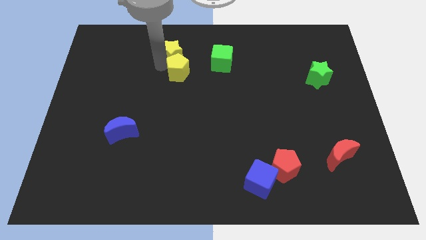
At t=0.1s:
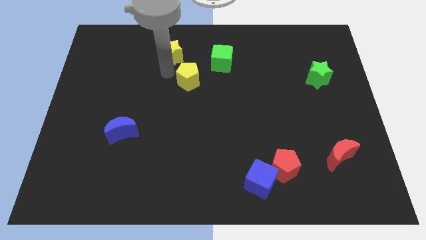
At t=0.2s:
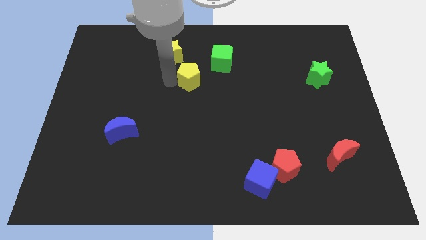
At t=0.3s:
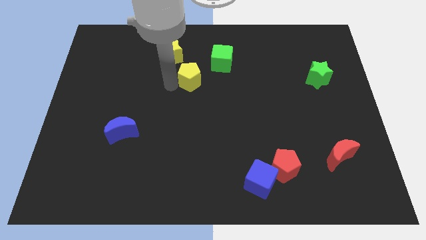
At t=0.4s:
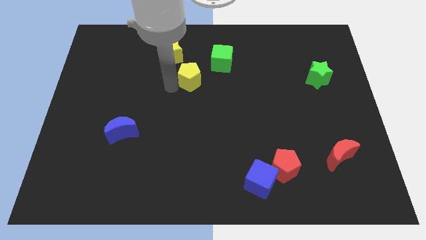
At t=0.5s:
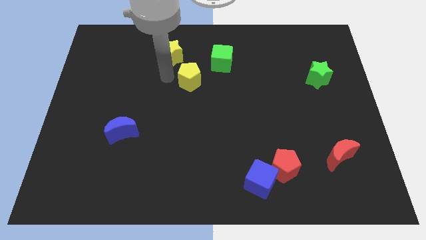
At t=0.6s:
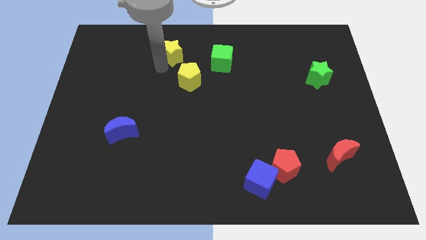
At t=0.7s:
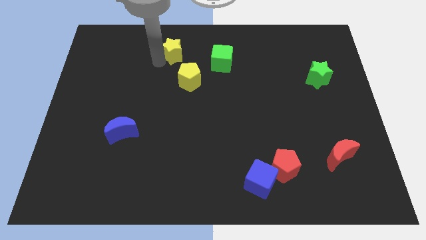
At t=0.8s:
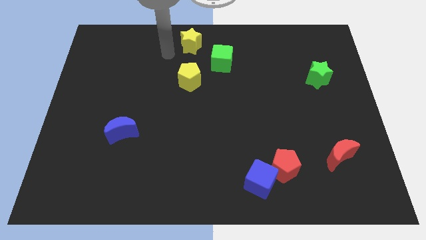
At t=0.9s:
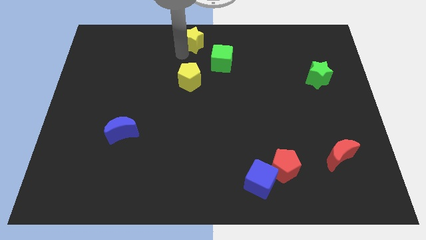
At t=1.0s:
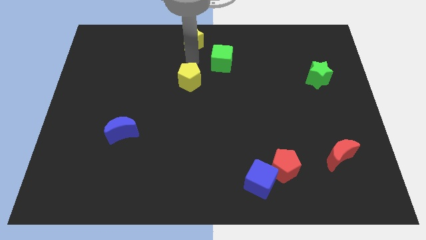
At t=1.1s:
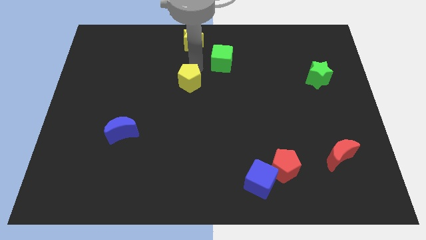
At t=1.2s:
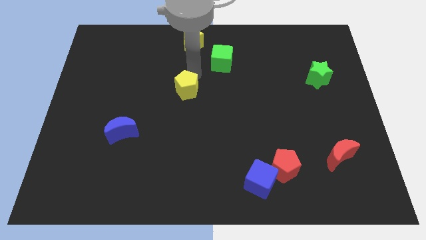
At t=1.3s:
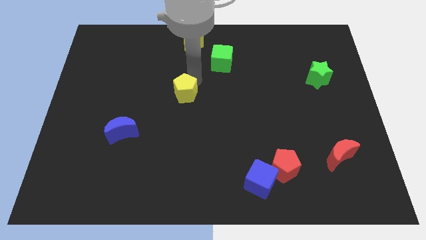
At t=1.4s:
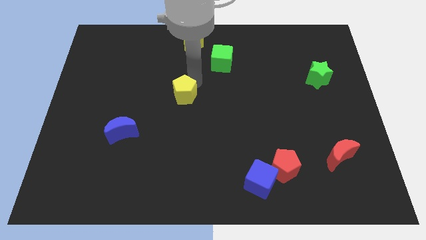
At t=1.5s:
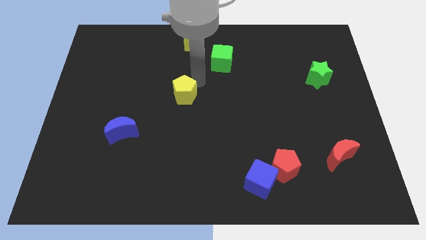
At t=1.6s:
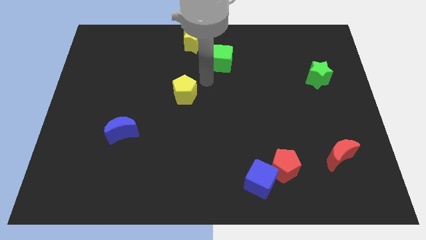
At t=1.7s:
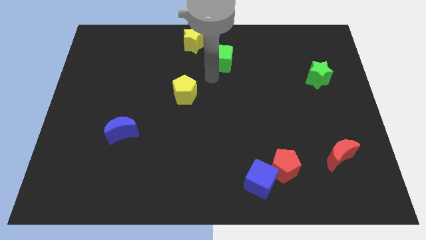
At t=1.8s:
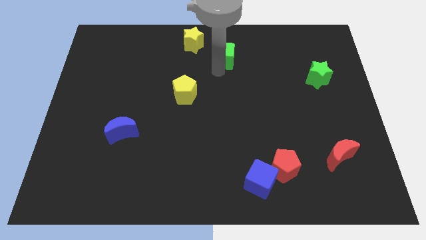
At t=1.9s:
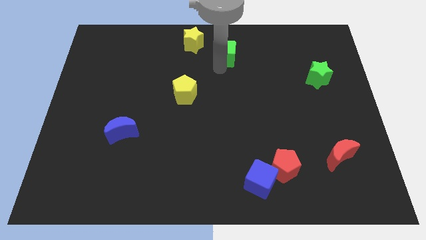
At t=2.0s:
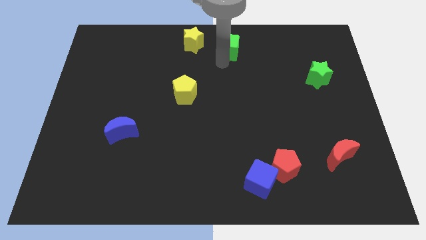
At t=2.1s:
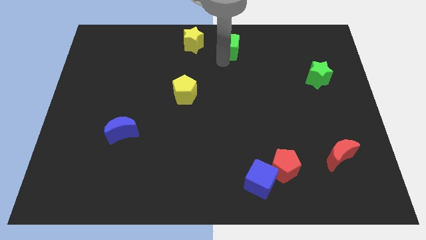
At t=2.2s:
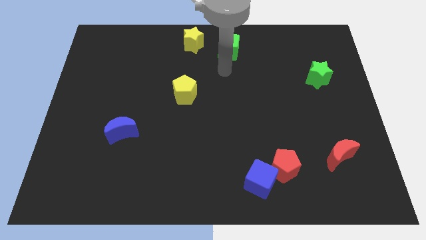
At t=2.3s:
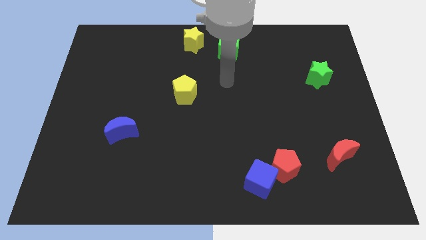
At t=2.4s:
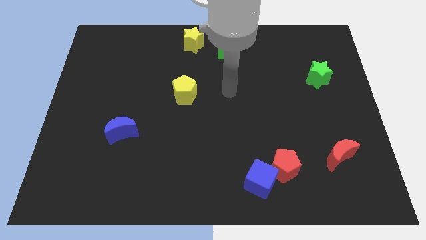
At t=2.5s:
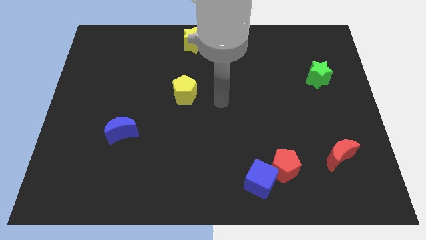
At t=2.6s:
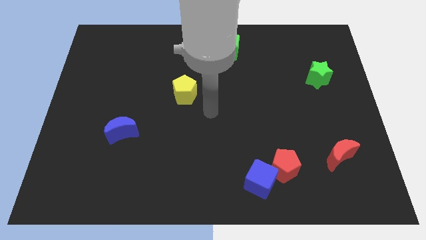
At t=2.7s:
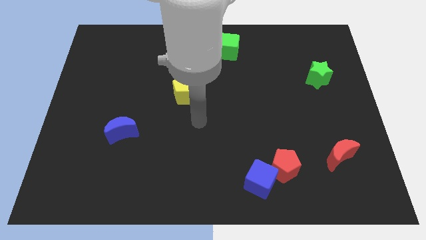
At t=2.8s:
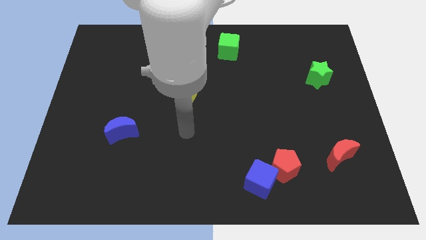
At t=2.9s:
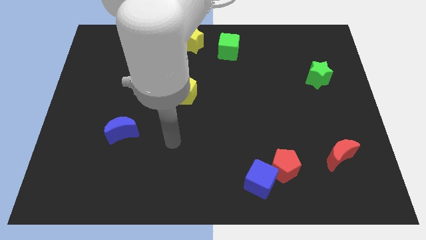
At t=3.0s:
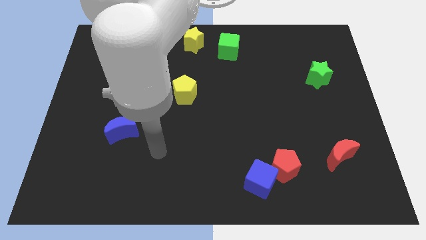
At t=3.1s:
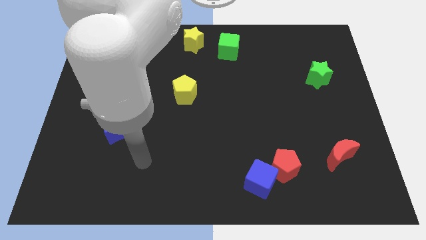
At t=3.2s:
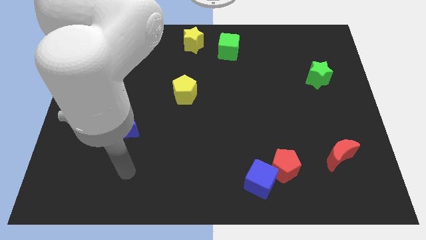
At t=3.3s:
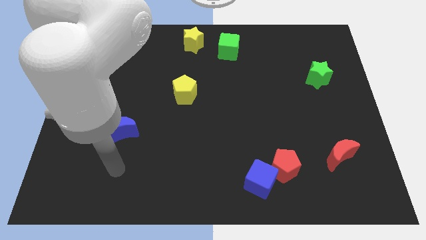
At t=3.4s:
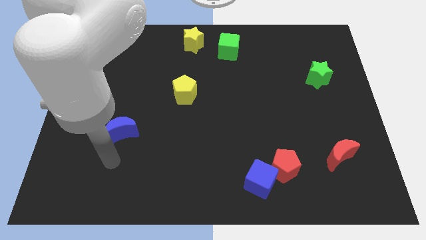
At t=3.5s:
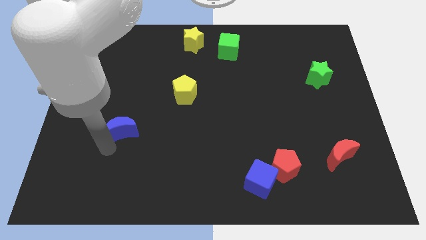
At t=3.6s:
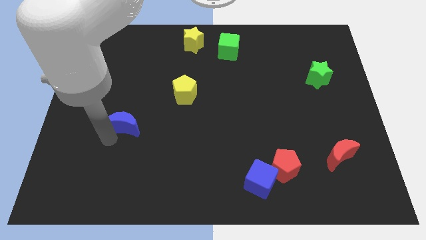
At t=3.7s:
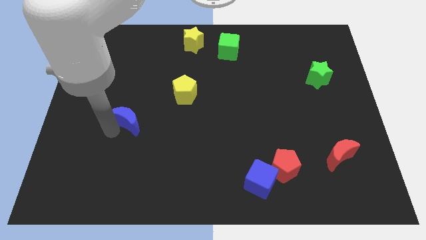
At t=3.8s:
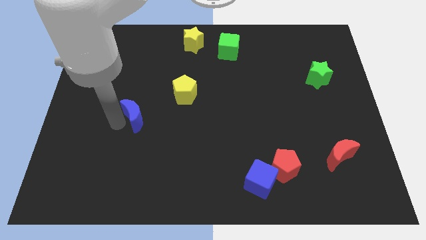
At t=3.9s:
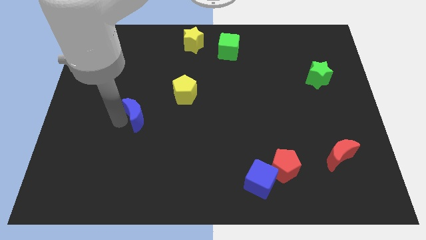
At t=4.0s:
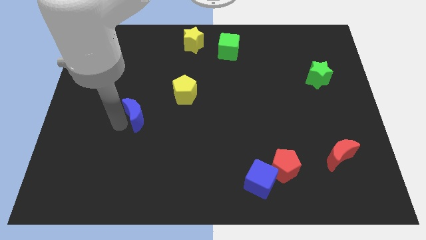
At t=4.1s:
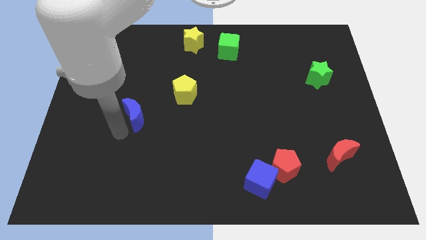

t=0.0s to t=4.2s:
move the yellow pentagon diagonally to the green cube

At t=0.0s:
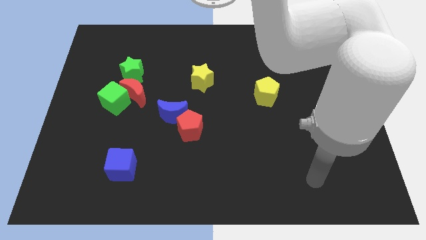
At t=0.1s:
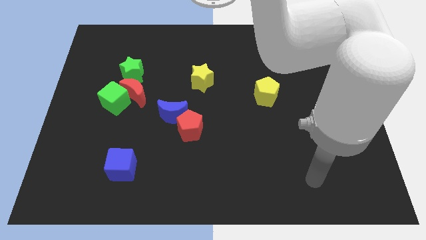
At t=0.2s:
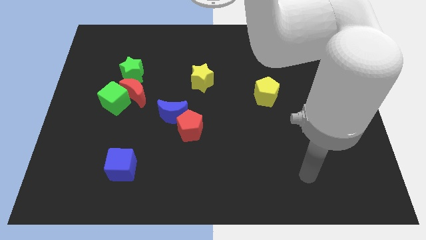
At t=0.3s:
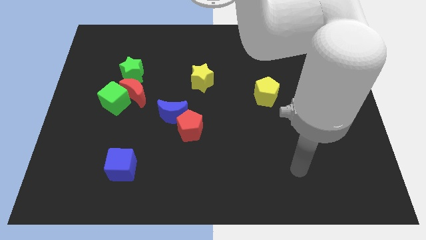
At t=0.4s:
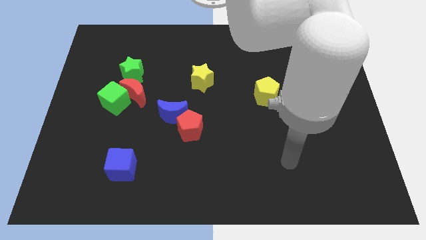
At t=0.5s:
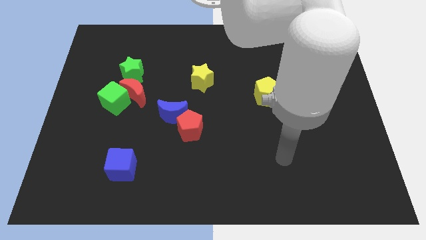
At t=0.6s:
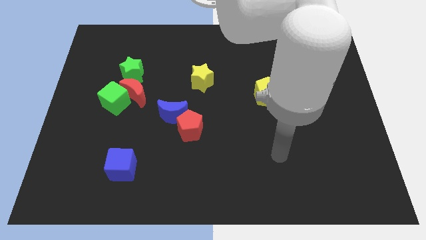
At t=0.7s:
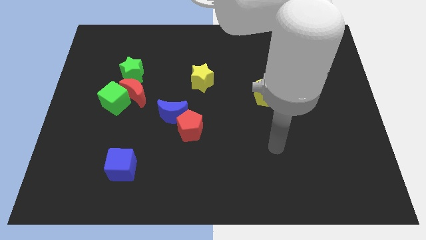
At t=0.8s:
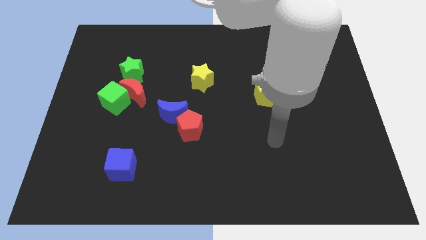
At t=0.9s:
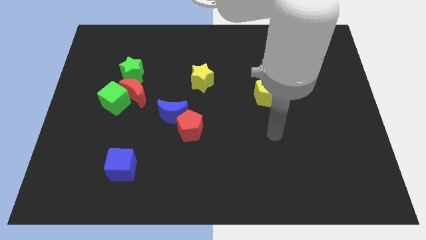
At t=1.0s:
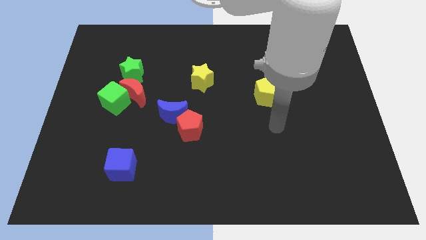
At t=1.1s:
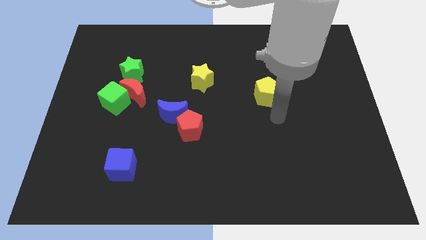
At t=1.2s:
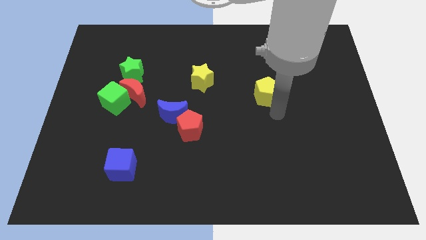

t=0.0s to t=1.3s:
point your arm at the bottom of the yellow pentagon

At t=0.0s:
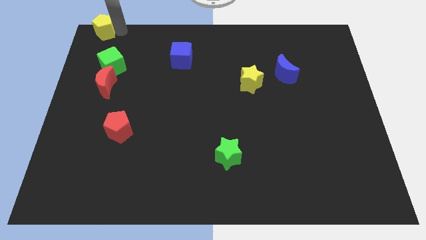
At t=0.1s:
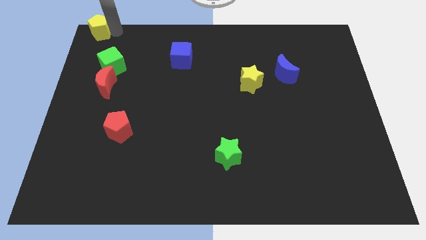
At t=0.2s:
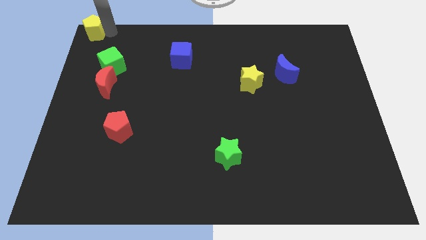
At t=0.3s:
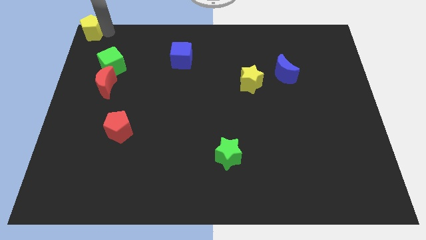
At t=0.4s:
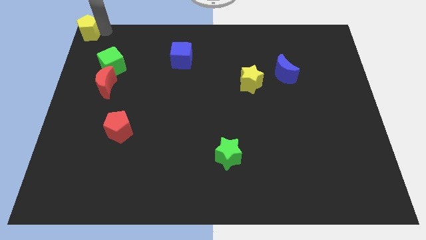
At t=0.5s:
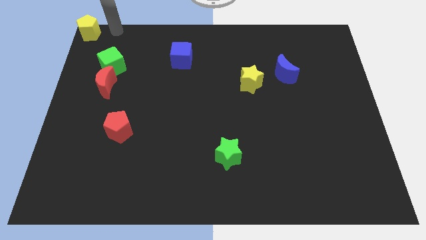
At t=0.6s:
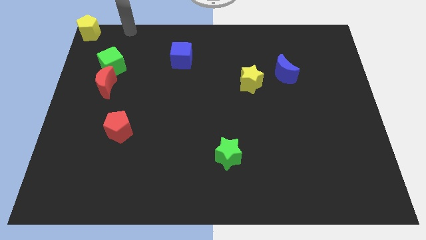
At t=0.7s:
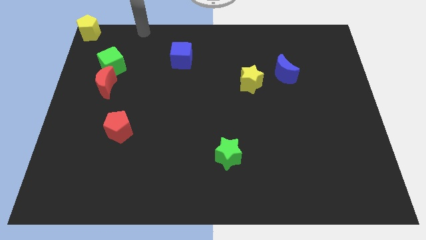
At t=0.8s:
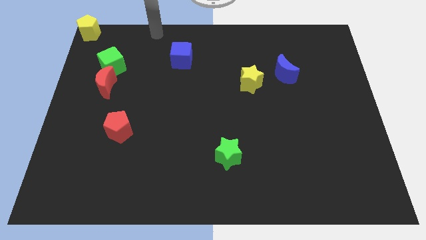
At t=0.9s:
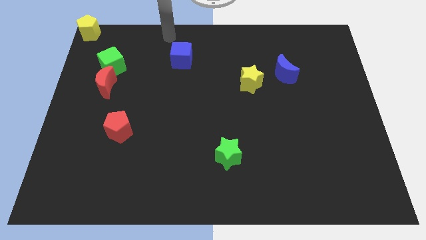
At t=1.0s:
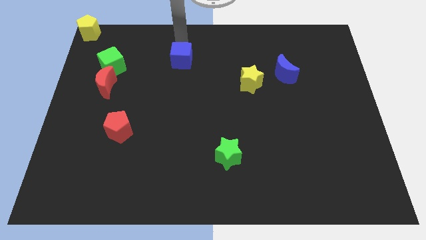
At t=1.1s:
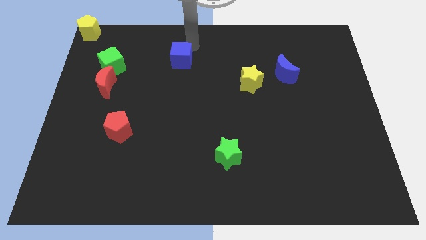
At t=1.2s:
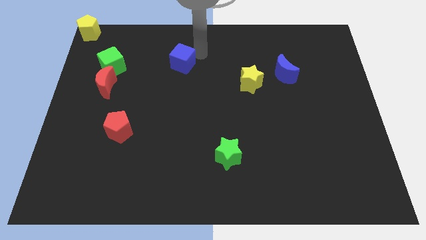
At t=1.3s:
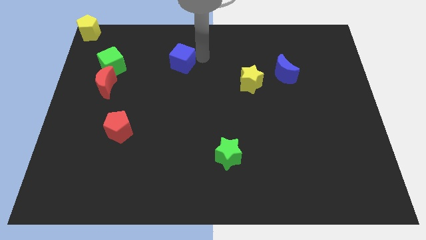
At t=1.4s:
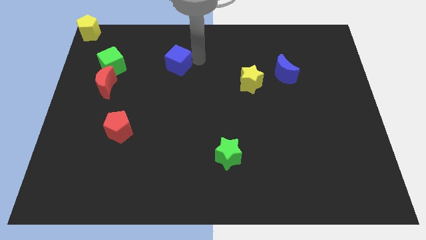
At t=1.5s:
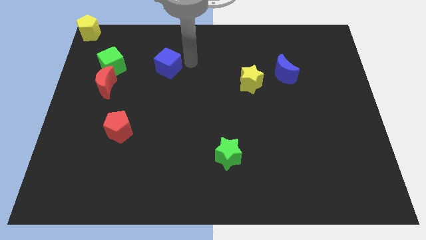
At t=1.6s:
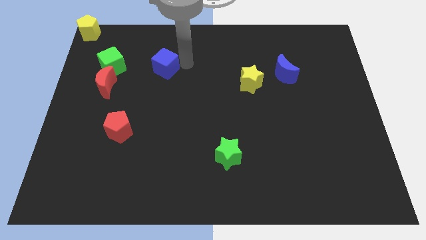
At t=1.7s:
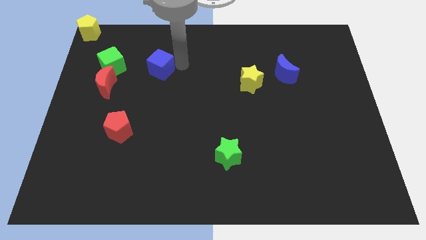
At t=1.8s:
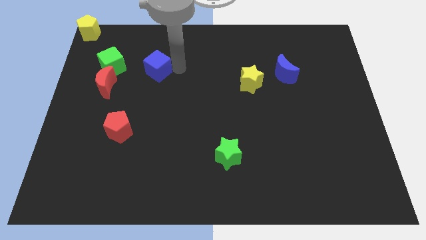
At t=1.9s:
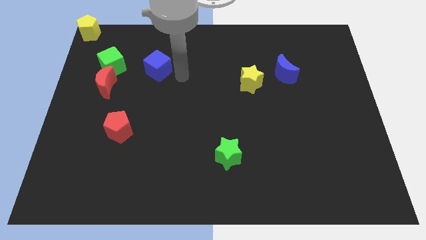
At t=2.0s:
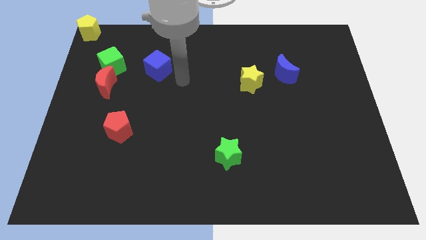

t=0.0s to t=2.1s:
move blue cube near the green cube

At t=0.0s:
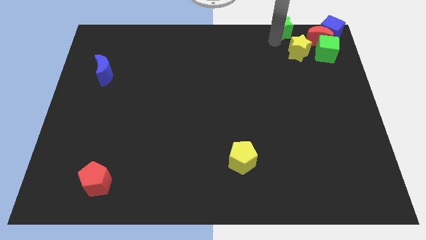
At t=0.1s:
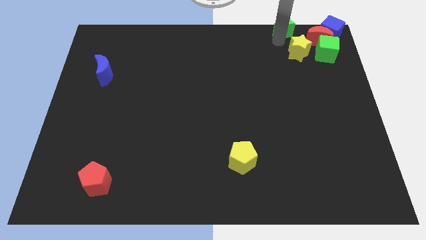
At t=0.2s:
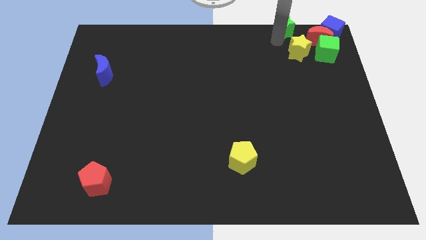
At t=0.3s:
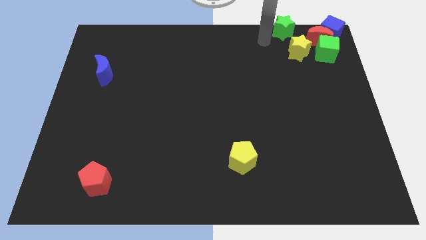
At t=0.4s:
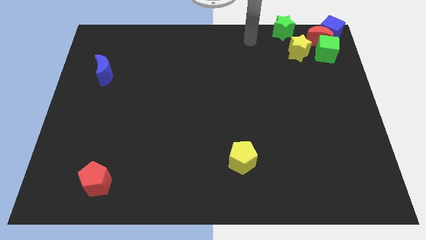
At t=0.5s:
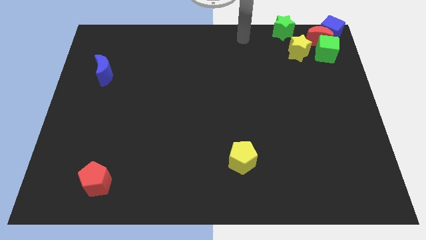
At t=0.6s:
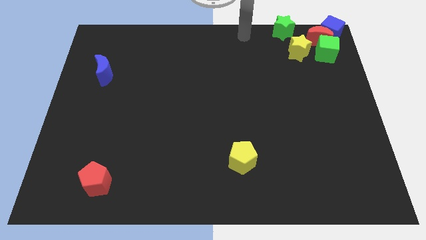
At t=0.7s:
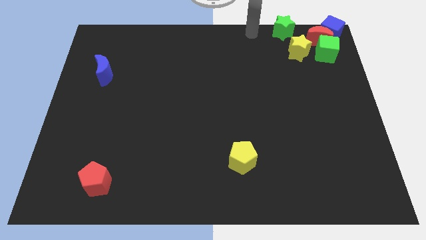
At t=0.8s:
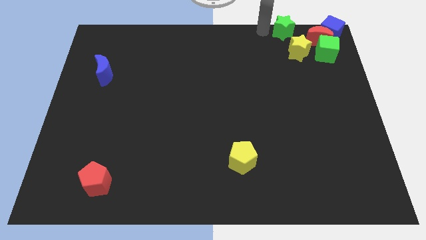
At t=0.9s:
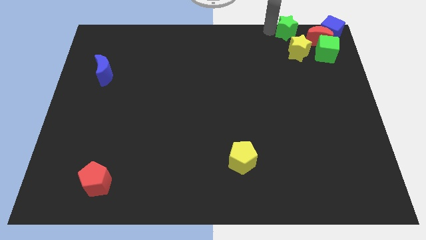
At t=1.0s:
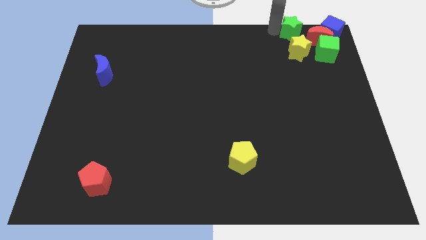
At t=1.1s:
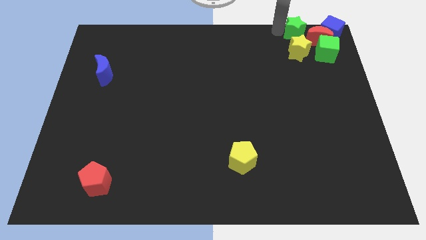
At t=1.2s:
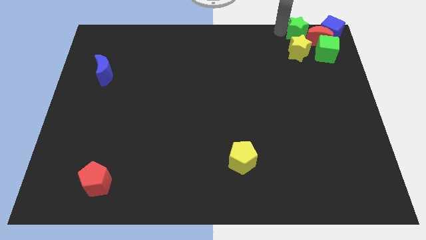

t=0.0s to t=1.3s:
place the green star above the yellow star

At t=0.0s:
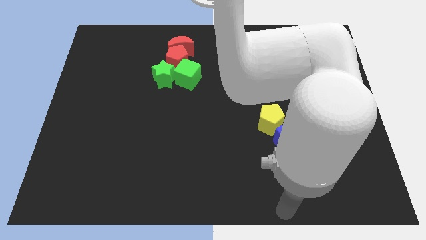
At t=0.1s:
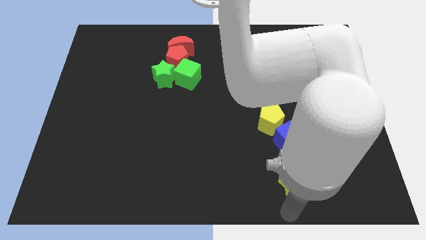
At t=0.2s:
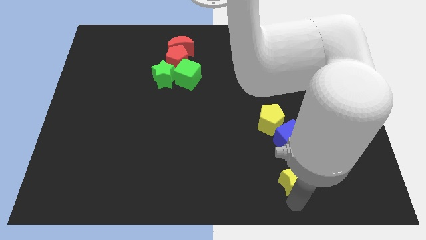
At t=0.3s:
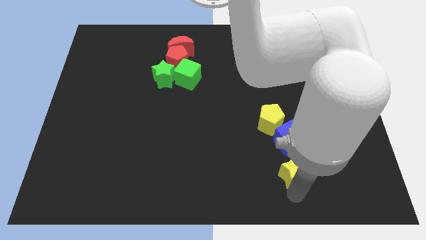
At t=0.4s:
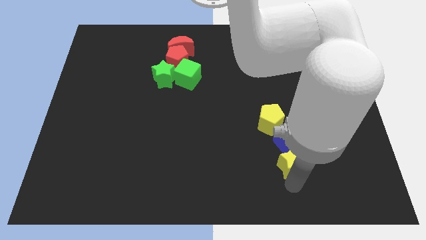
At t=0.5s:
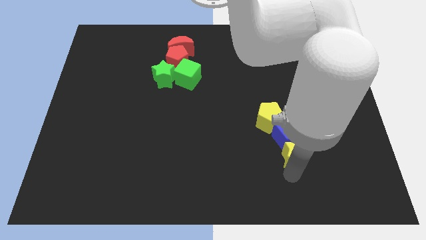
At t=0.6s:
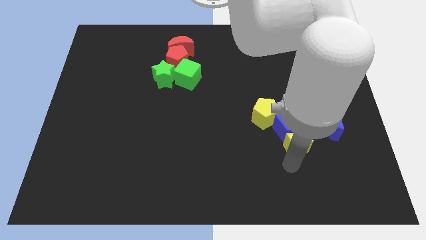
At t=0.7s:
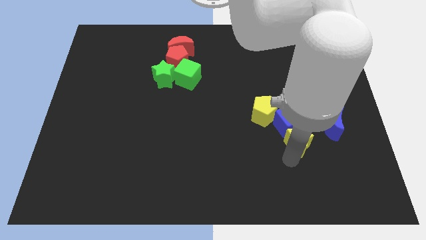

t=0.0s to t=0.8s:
push the yellow star into blue cube
